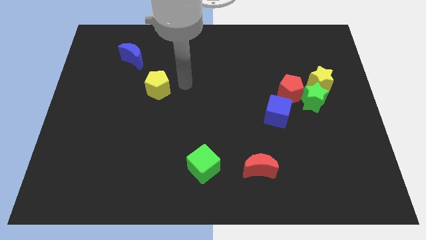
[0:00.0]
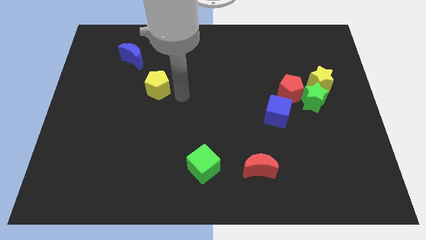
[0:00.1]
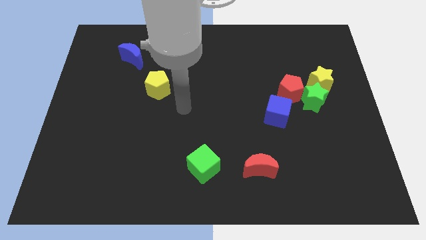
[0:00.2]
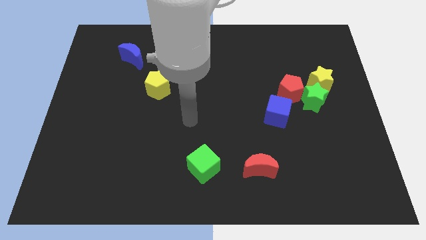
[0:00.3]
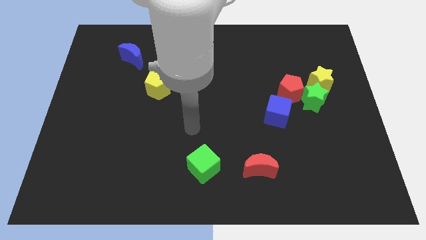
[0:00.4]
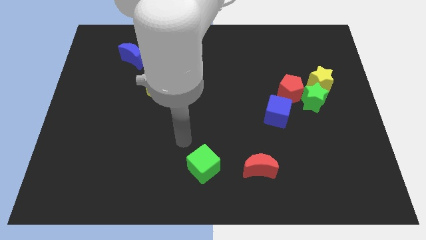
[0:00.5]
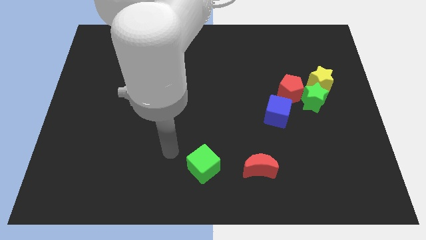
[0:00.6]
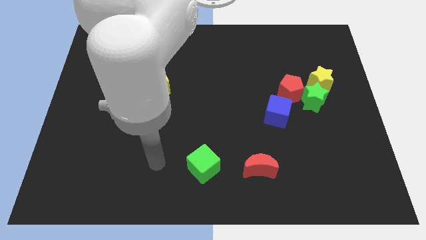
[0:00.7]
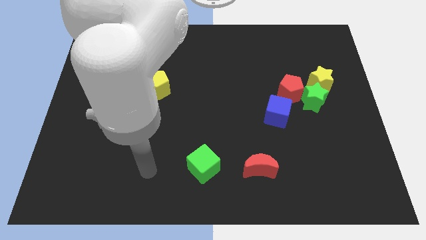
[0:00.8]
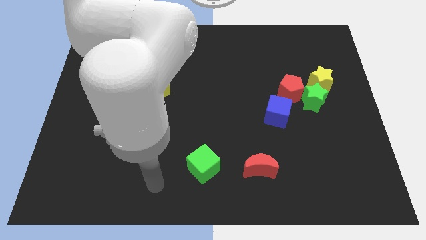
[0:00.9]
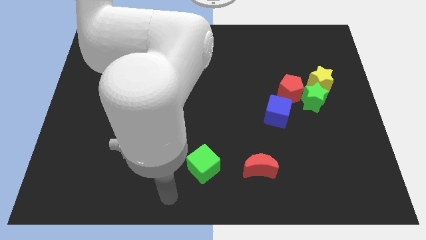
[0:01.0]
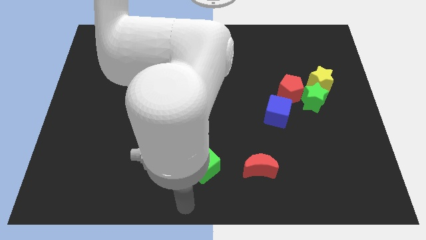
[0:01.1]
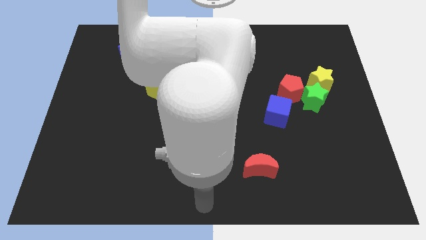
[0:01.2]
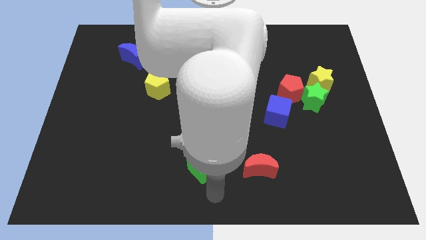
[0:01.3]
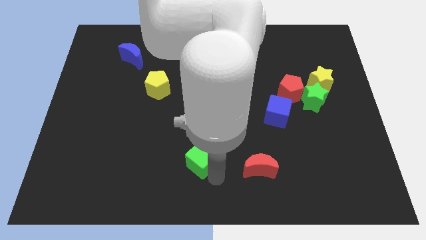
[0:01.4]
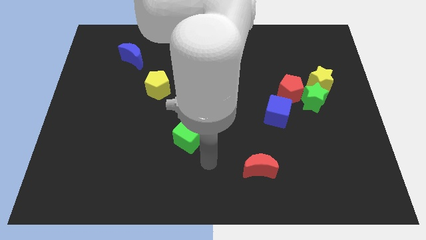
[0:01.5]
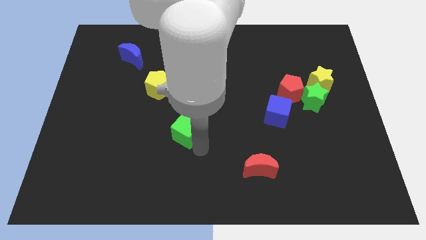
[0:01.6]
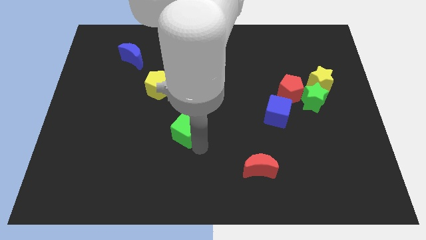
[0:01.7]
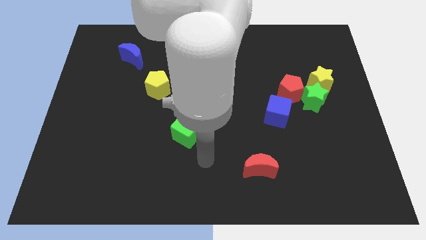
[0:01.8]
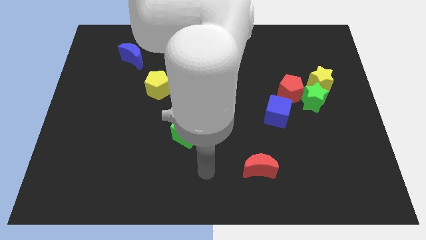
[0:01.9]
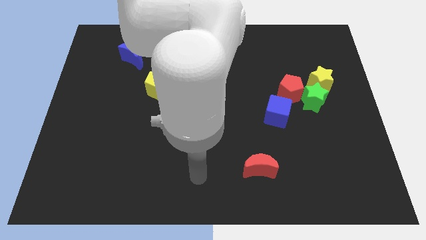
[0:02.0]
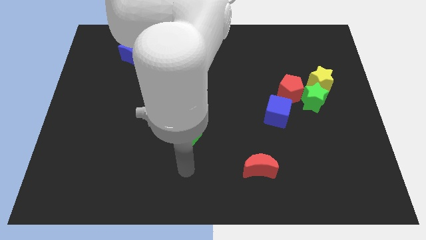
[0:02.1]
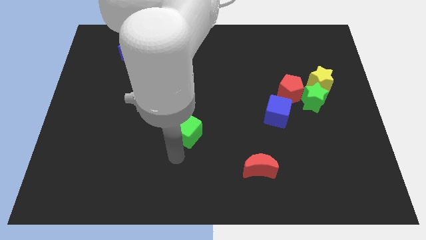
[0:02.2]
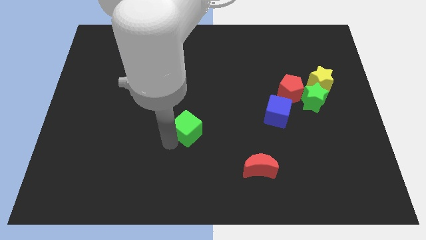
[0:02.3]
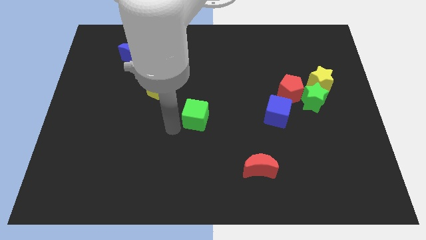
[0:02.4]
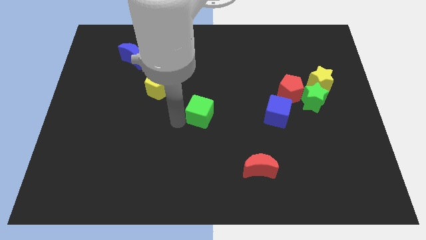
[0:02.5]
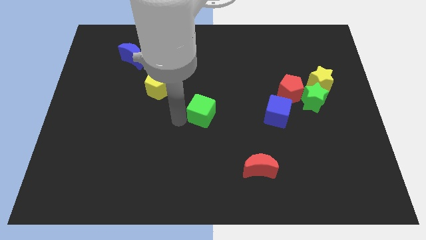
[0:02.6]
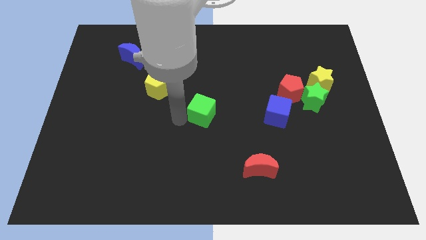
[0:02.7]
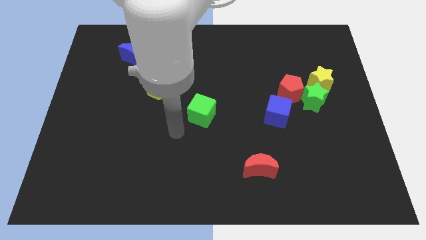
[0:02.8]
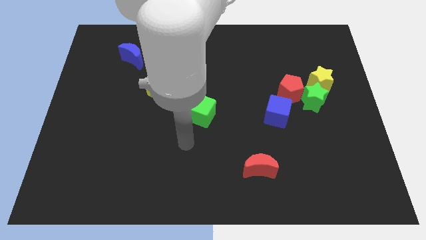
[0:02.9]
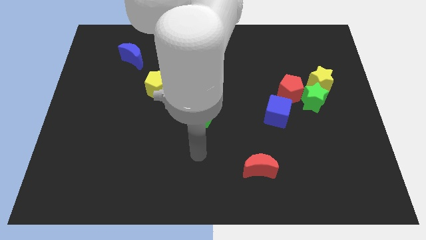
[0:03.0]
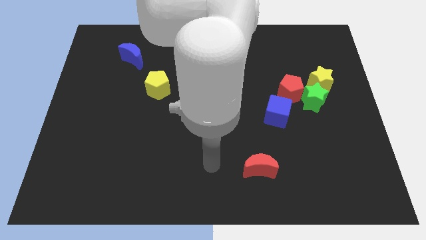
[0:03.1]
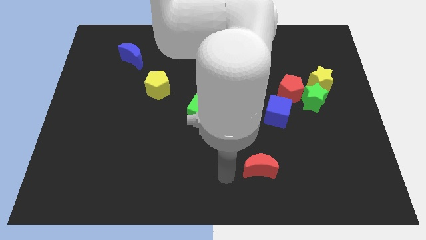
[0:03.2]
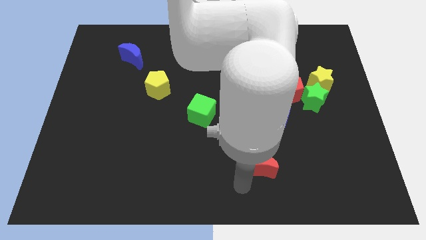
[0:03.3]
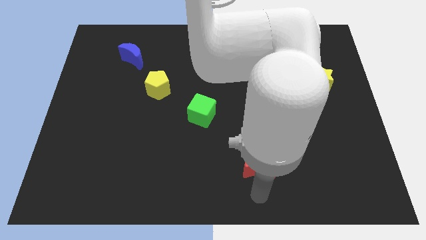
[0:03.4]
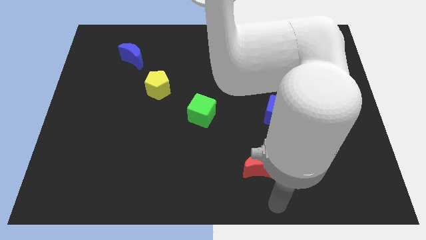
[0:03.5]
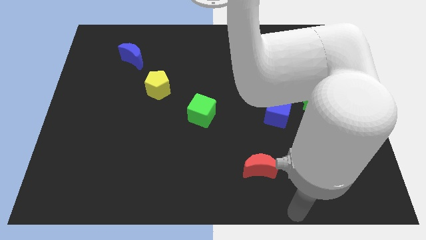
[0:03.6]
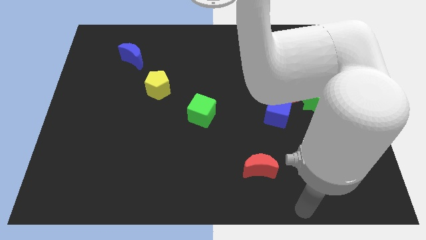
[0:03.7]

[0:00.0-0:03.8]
place the green cube diagonally towards yellow pentagon

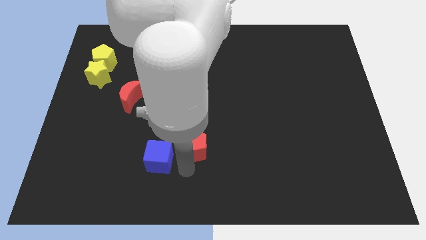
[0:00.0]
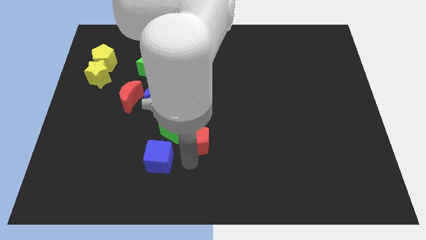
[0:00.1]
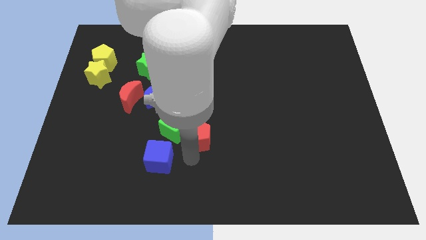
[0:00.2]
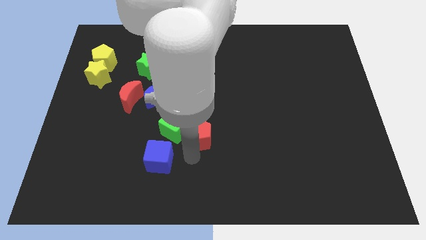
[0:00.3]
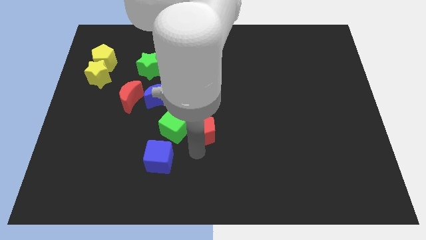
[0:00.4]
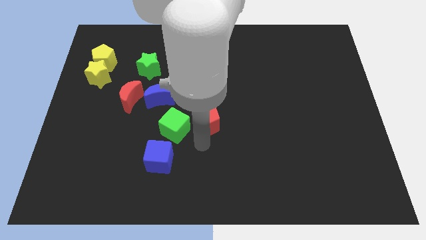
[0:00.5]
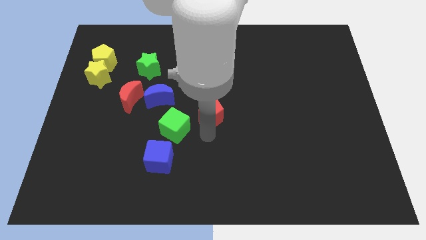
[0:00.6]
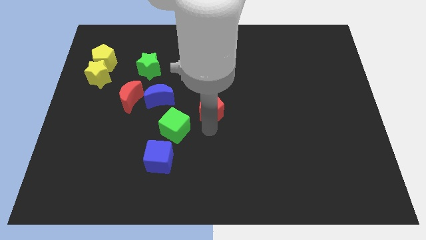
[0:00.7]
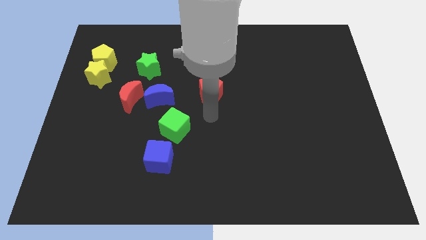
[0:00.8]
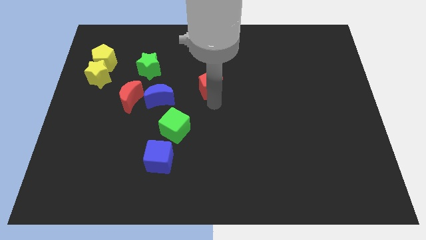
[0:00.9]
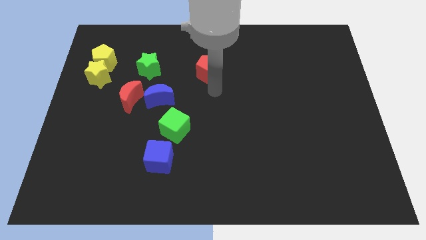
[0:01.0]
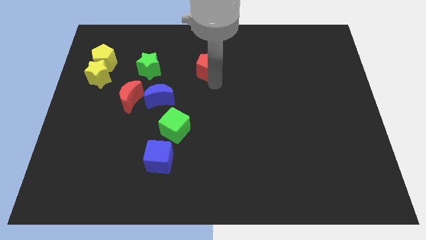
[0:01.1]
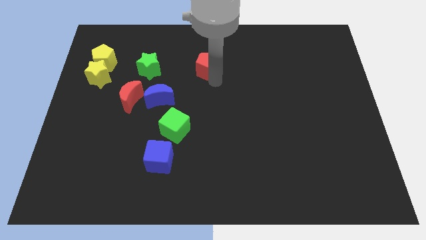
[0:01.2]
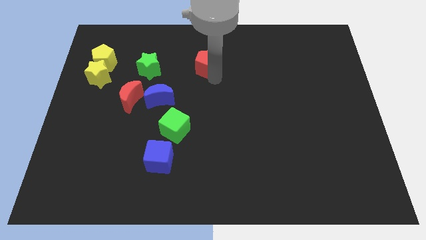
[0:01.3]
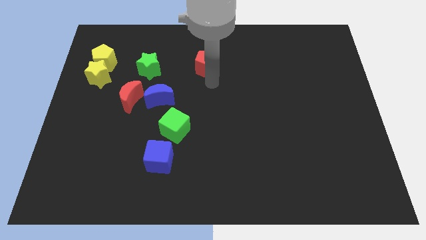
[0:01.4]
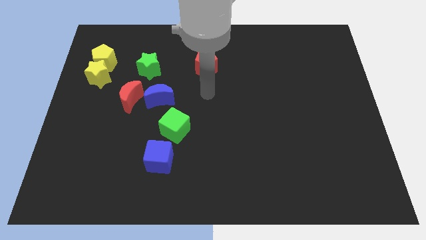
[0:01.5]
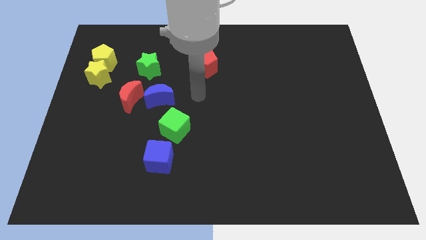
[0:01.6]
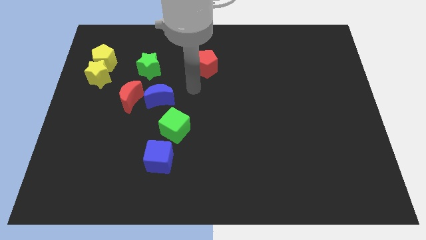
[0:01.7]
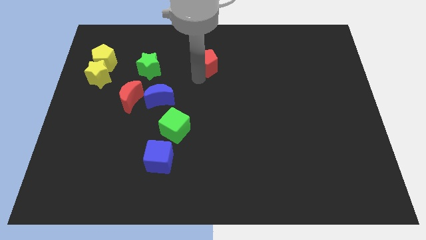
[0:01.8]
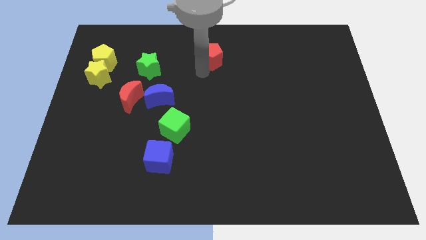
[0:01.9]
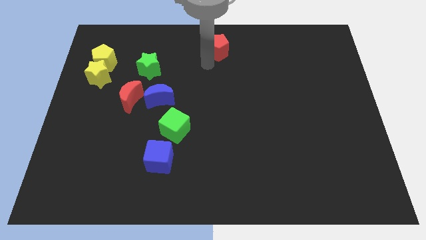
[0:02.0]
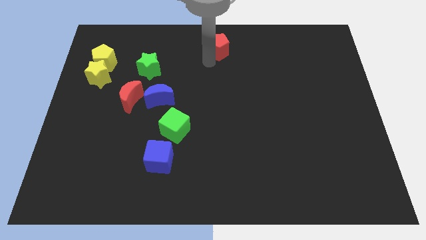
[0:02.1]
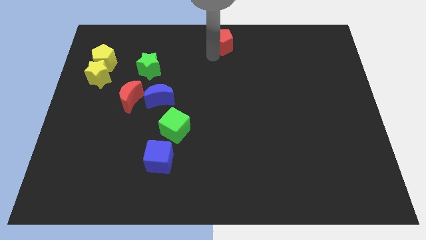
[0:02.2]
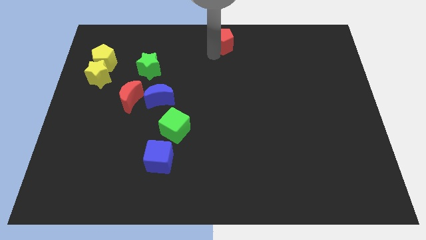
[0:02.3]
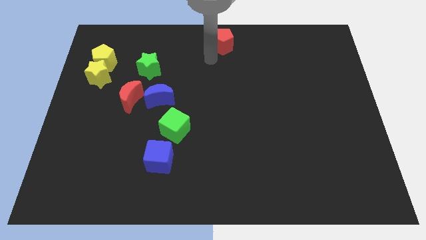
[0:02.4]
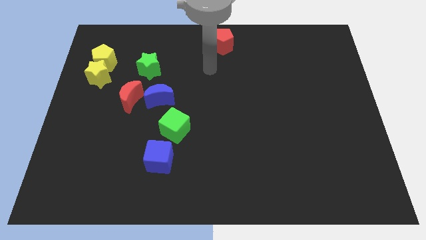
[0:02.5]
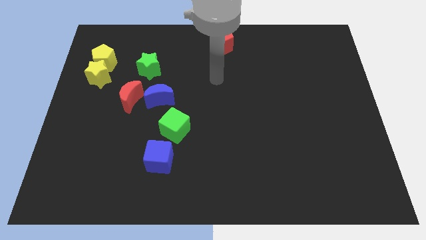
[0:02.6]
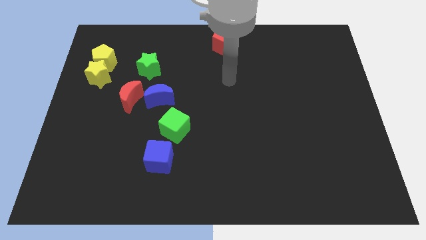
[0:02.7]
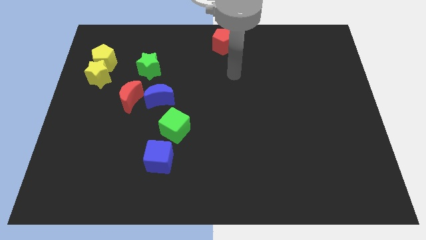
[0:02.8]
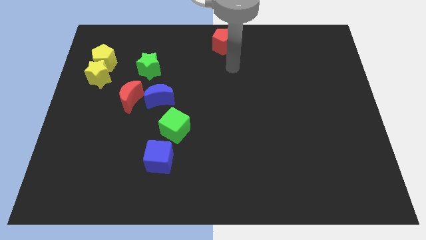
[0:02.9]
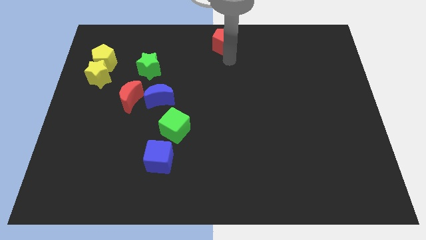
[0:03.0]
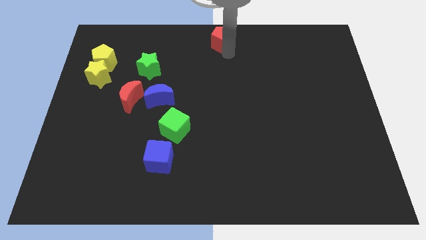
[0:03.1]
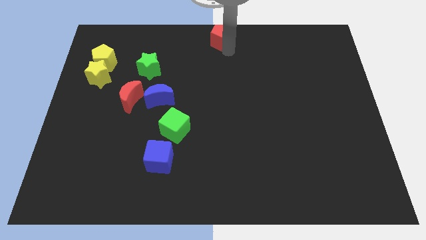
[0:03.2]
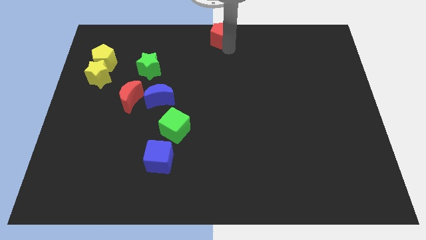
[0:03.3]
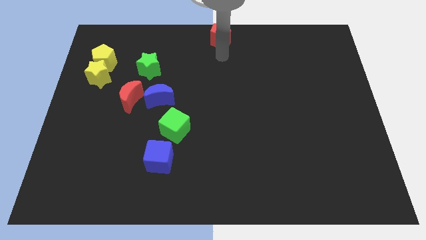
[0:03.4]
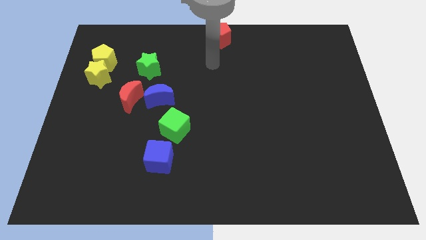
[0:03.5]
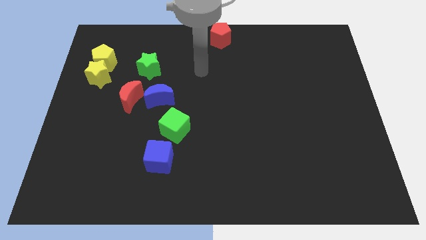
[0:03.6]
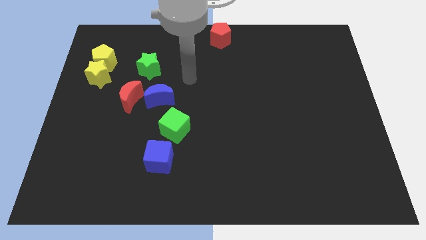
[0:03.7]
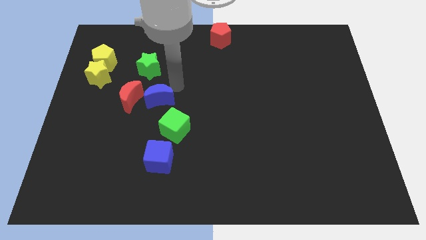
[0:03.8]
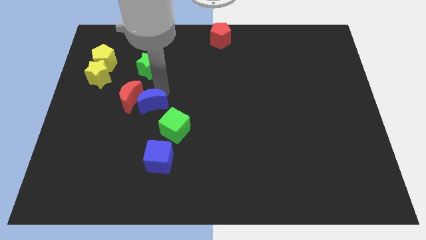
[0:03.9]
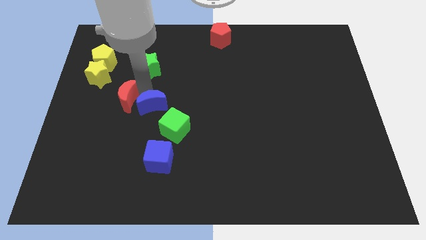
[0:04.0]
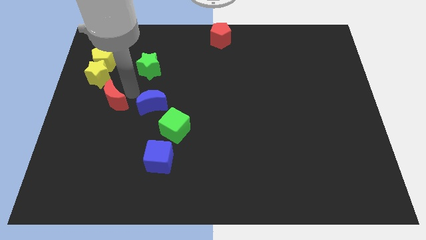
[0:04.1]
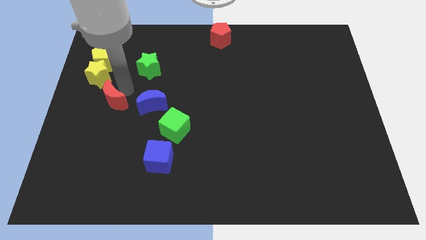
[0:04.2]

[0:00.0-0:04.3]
push the red pentagon to the top middle

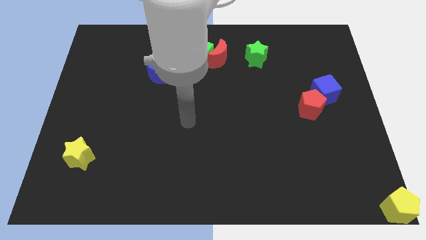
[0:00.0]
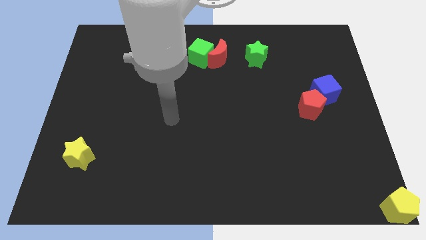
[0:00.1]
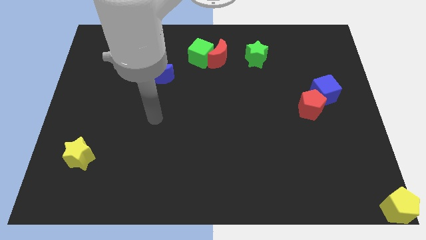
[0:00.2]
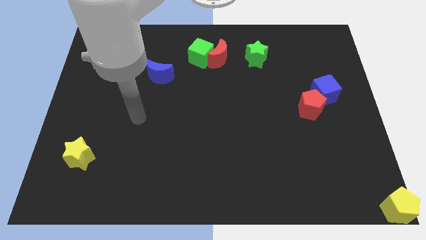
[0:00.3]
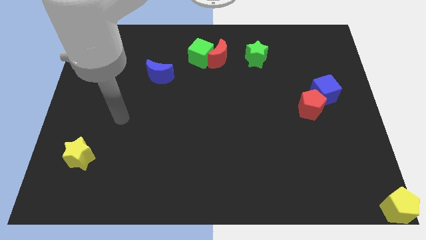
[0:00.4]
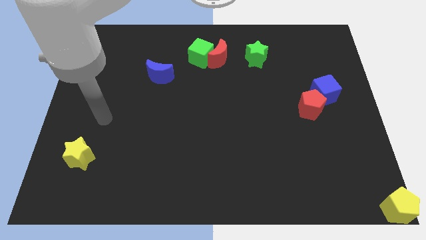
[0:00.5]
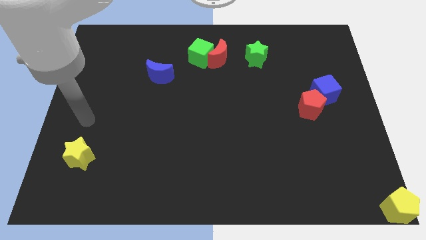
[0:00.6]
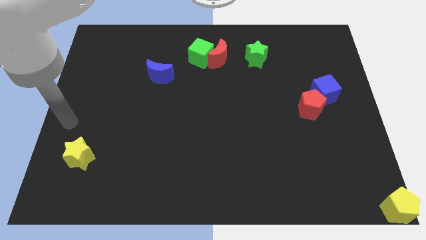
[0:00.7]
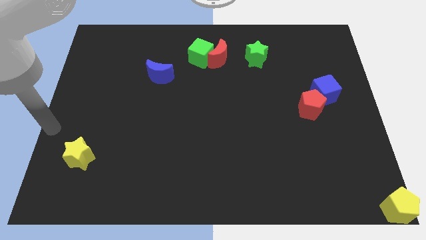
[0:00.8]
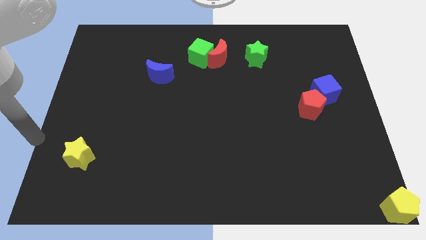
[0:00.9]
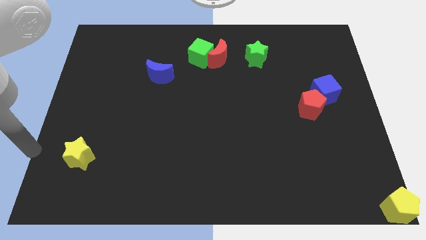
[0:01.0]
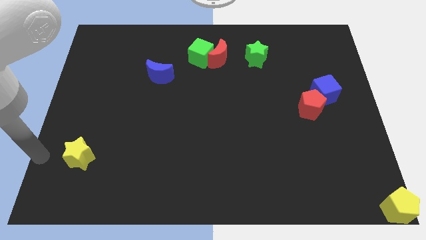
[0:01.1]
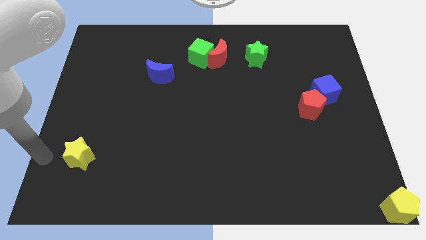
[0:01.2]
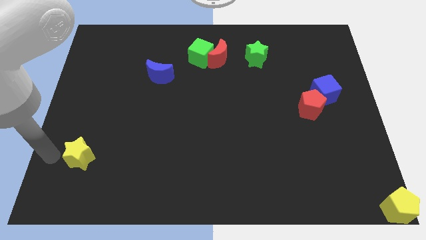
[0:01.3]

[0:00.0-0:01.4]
move the arm towards the yellow star
